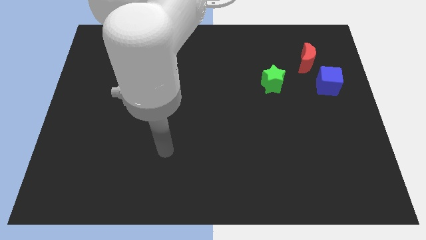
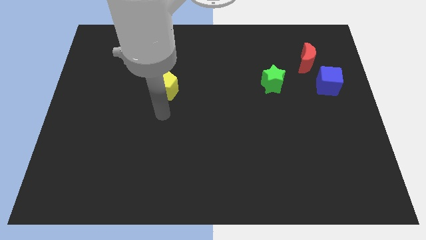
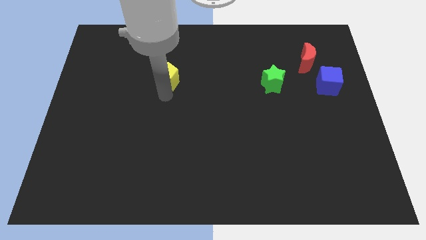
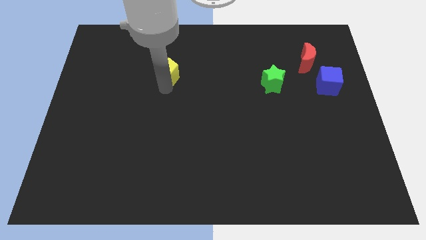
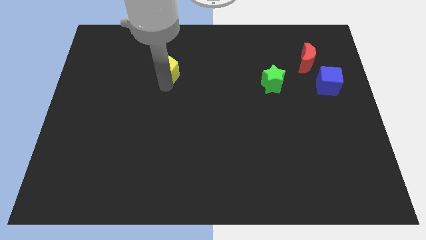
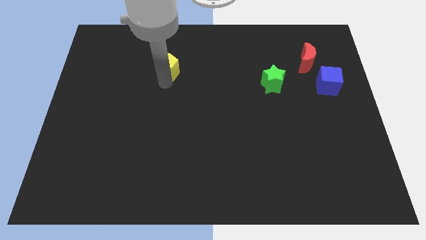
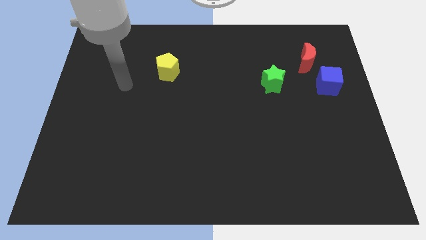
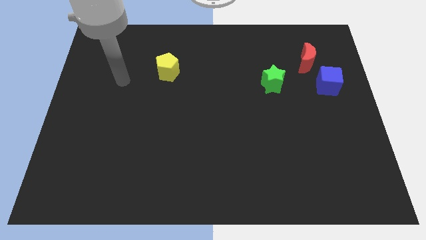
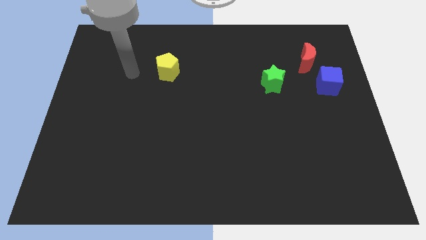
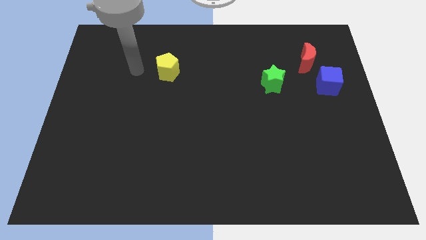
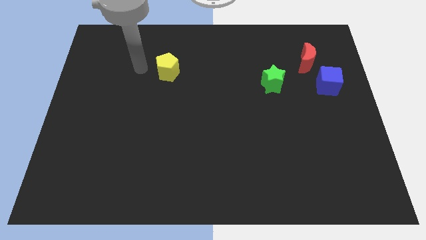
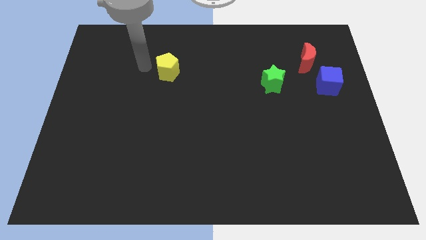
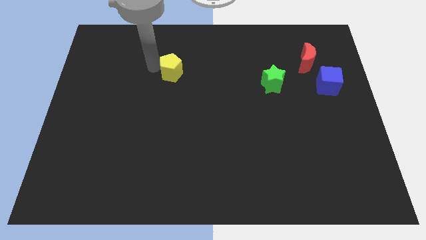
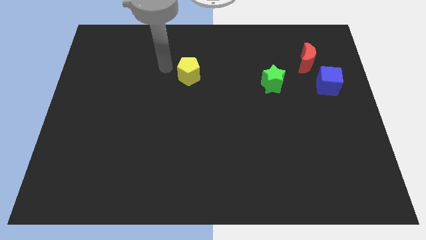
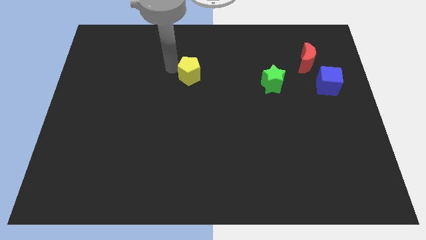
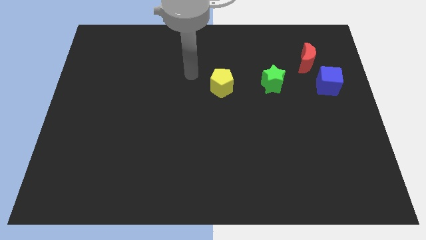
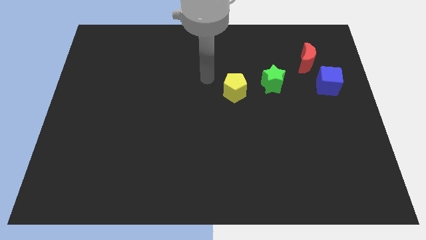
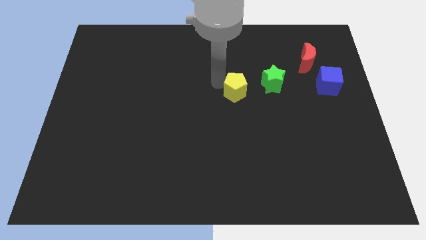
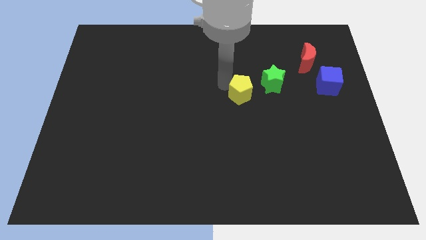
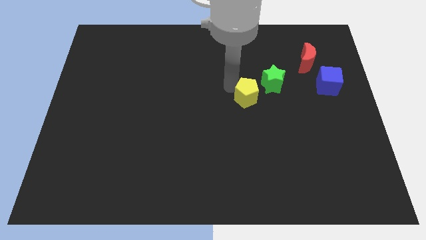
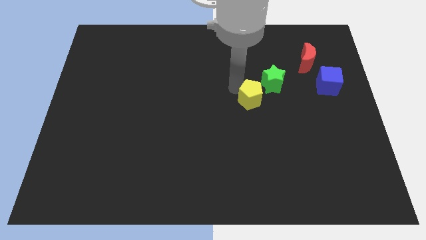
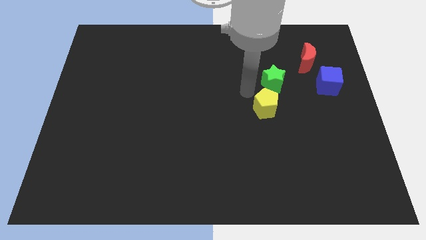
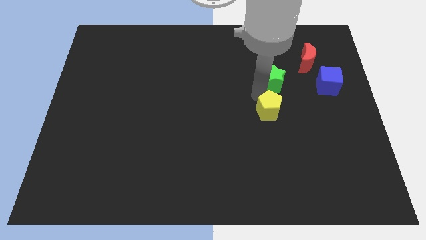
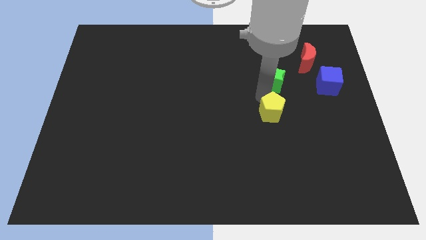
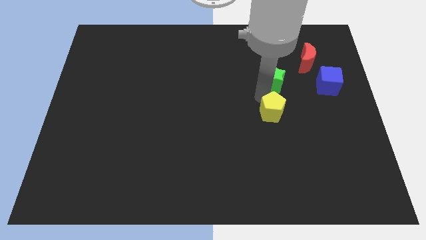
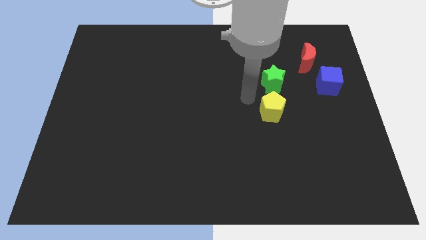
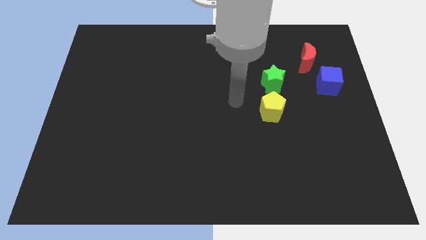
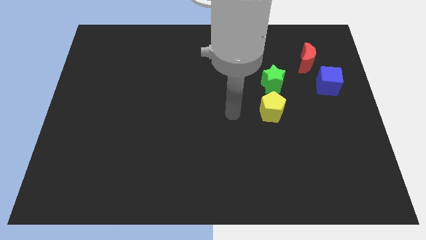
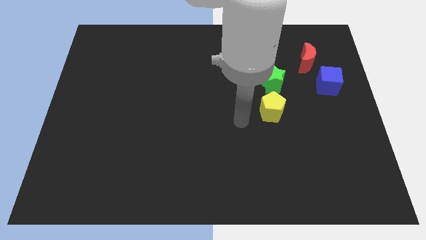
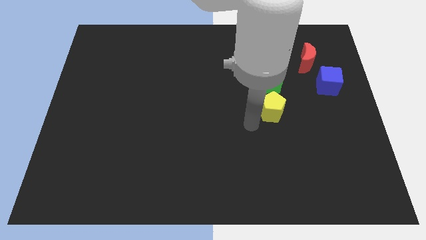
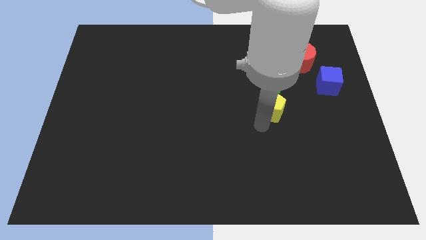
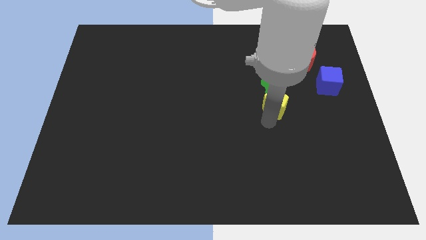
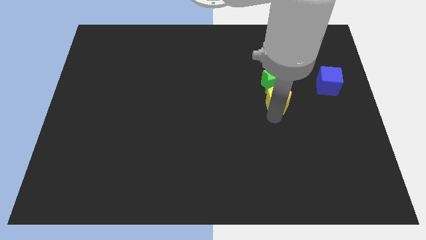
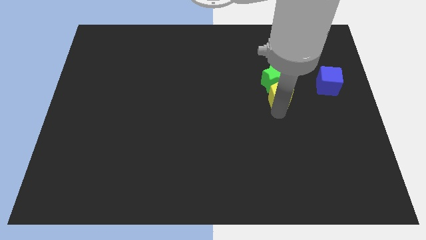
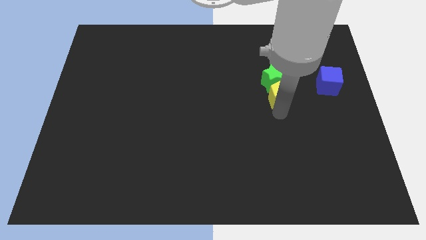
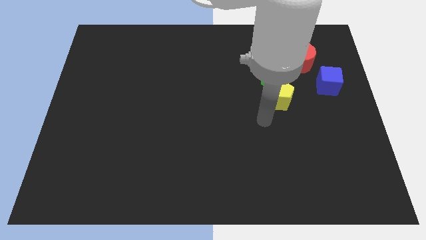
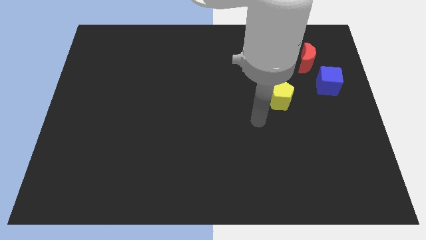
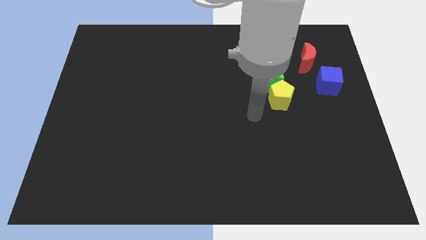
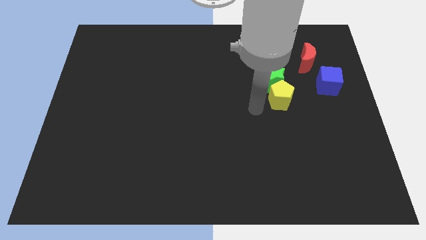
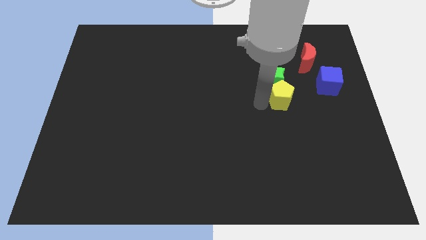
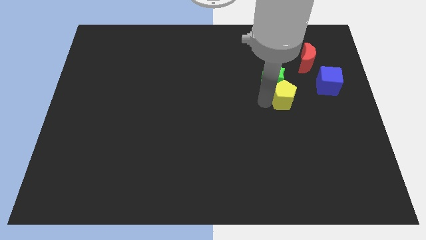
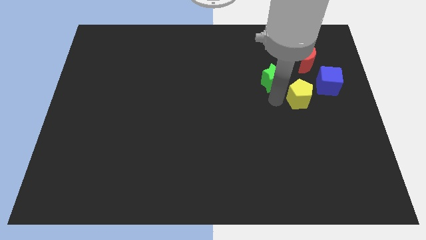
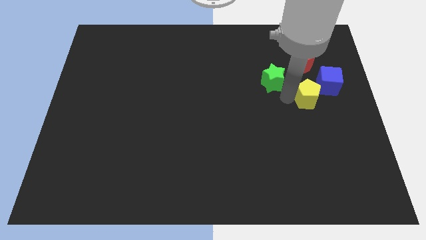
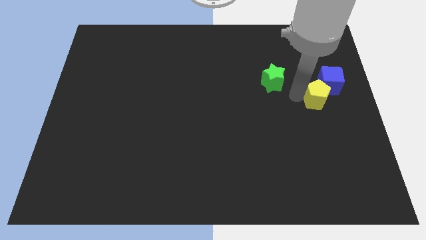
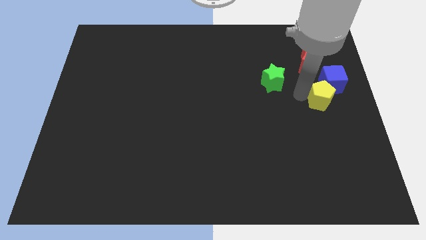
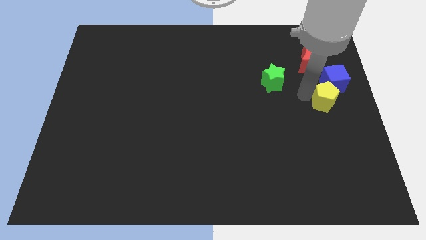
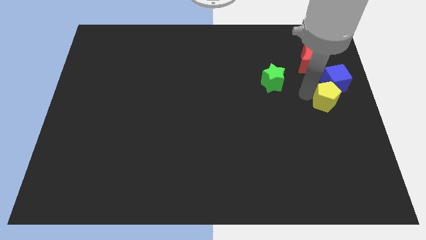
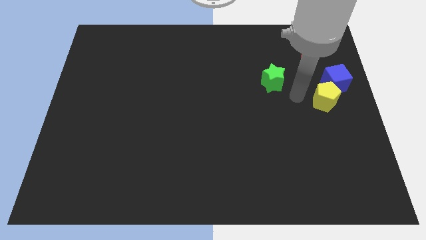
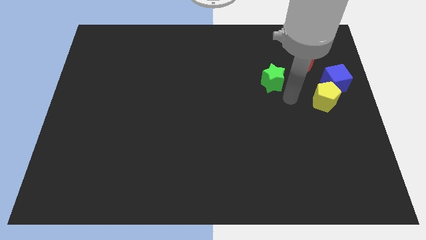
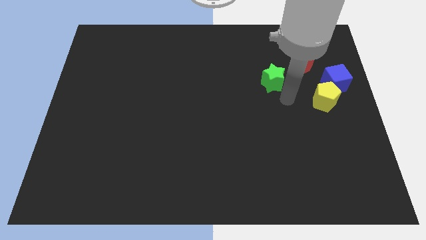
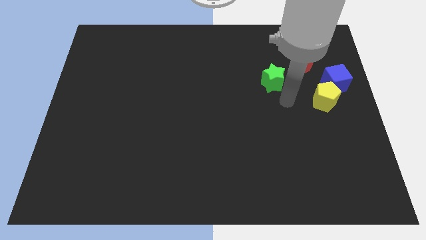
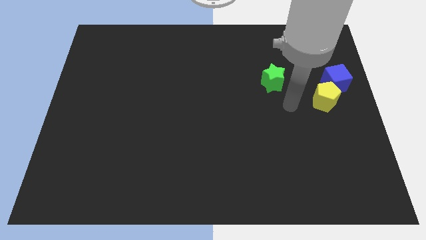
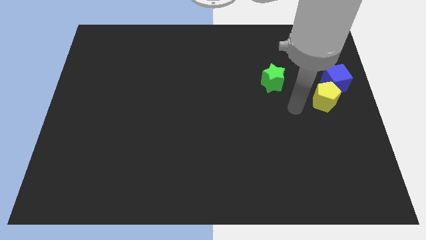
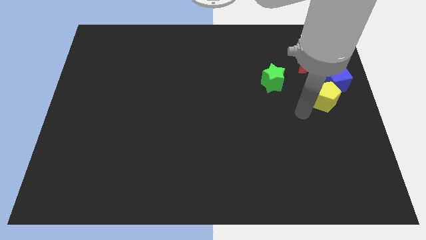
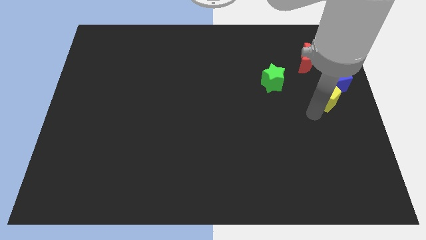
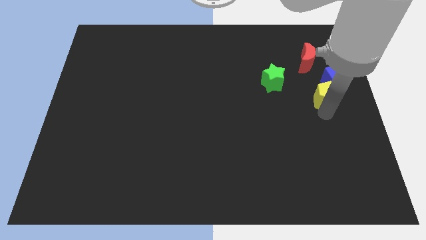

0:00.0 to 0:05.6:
put the yellow pentagon to the cube

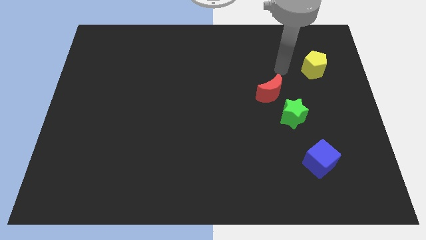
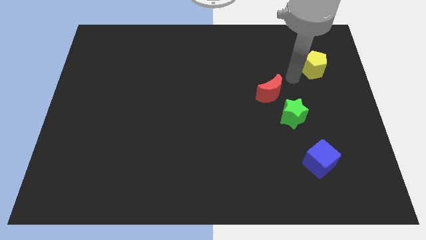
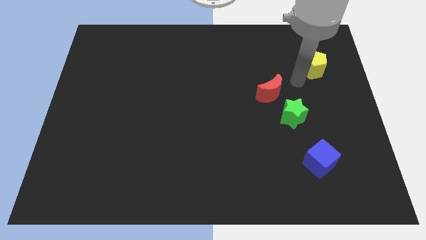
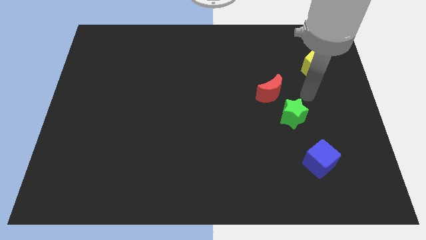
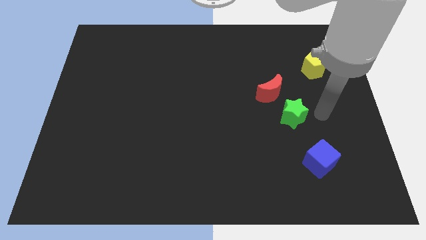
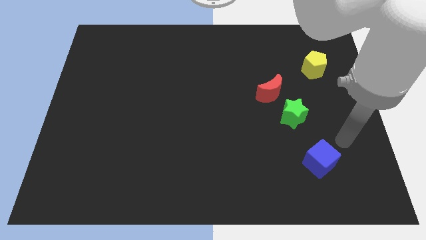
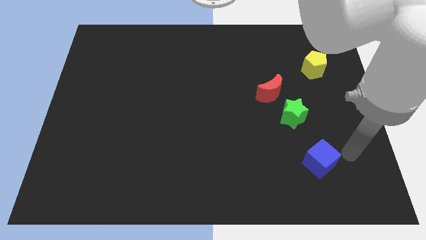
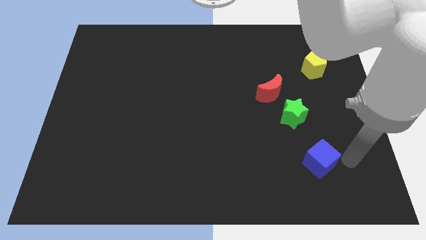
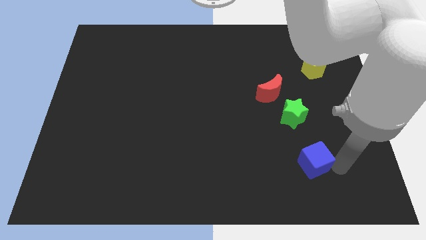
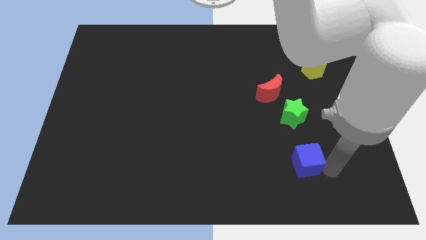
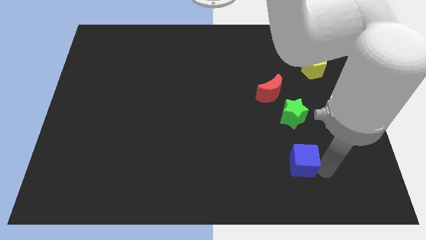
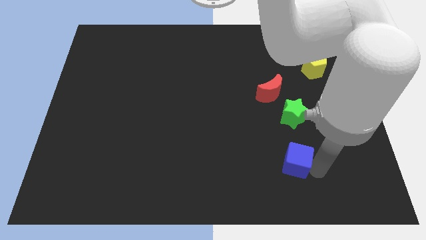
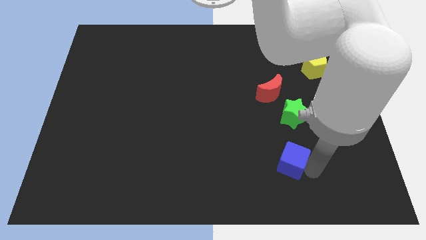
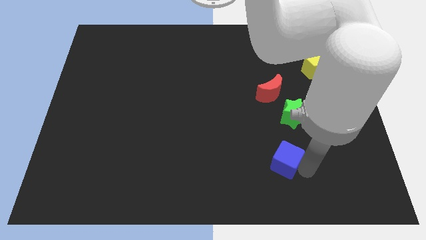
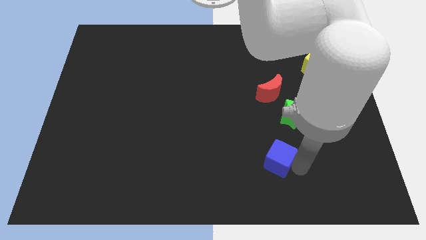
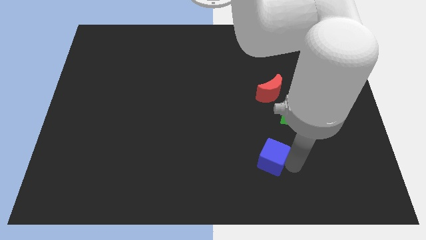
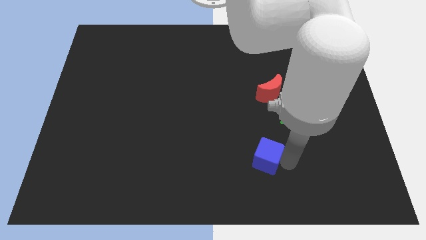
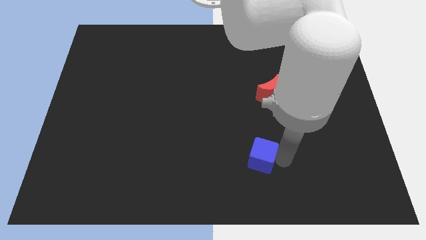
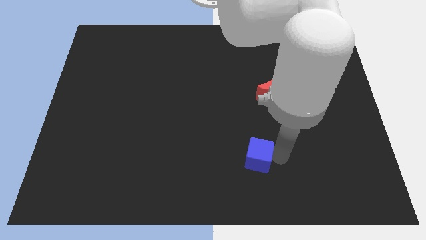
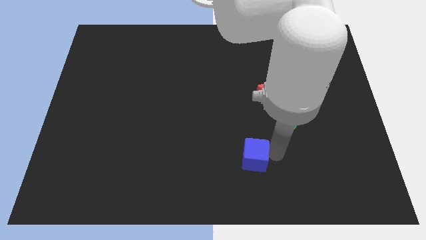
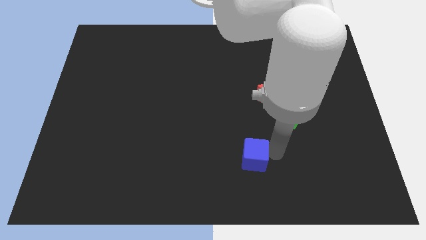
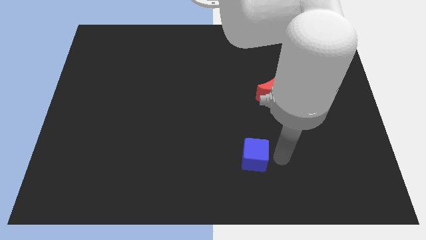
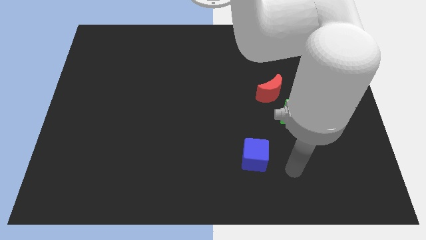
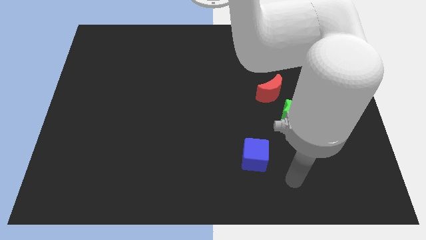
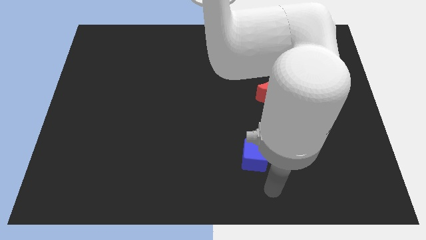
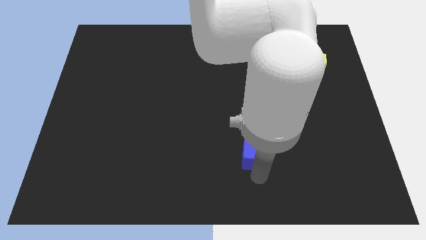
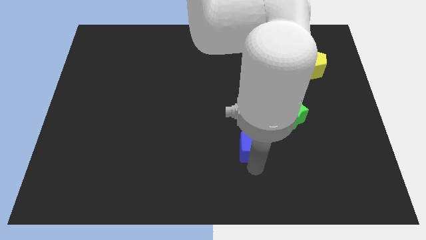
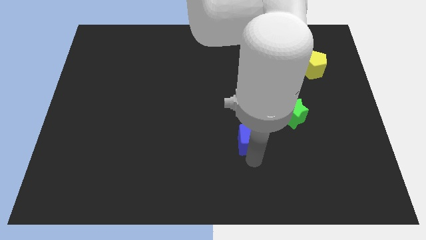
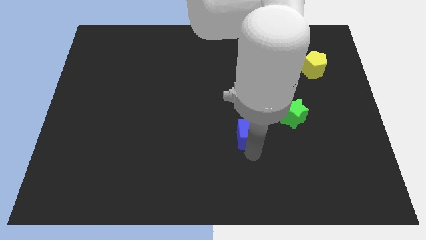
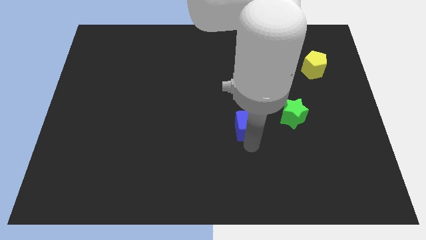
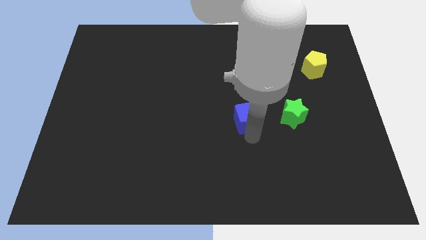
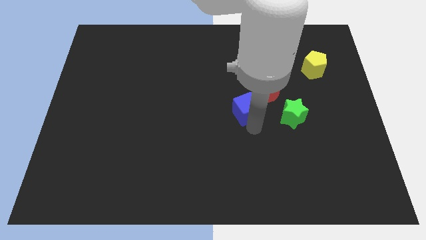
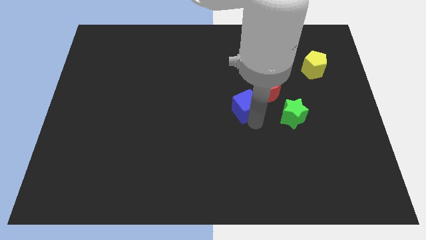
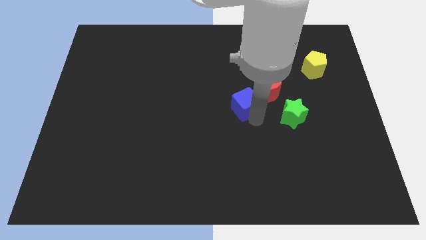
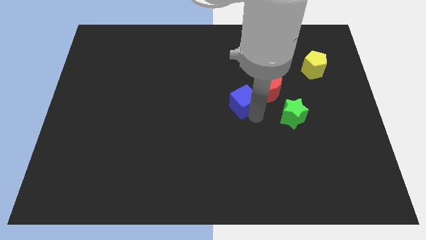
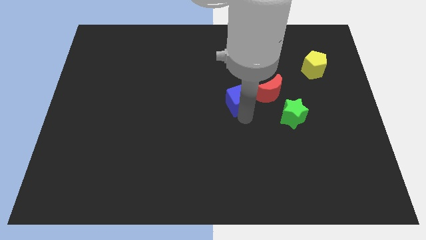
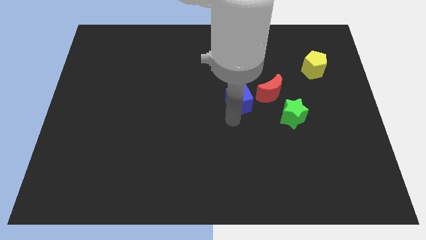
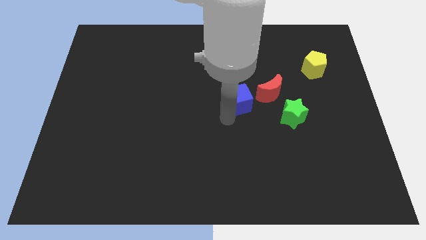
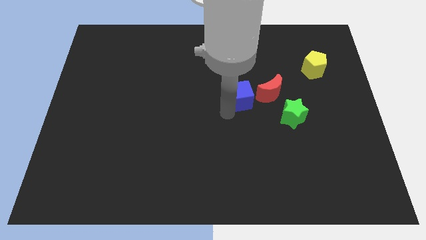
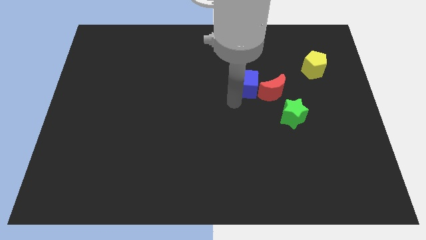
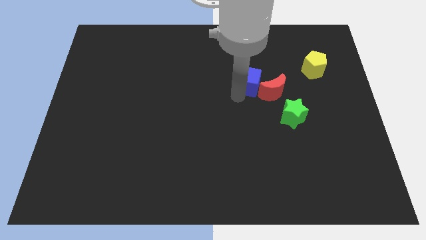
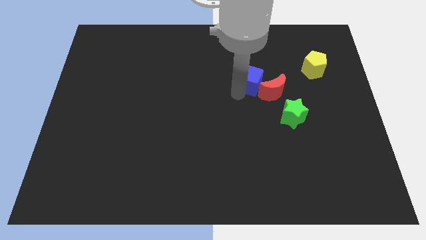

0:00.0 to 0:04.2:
push the blue block to the moon
